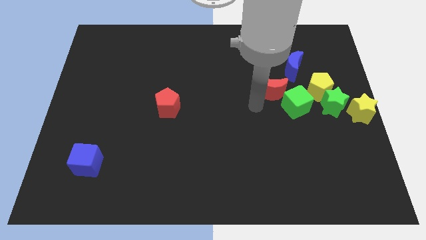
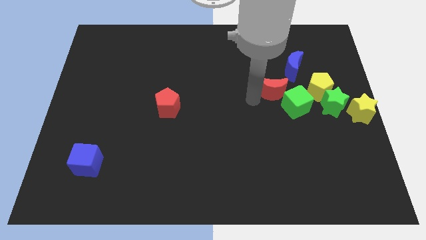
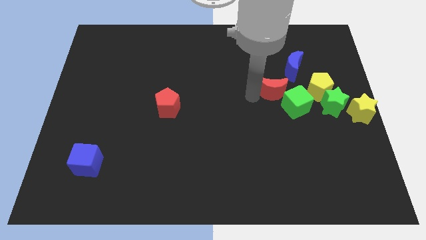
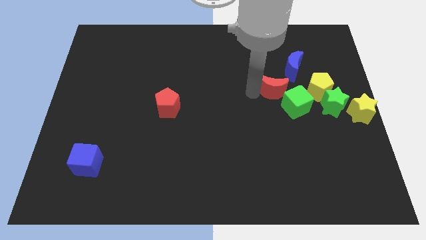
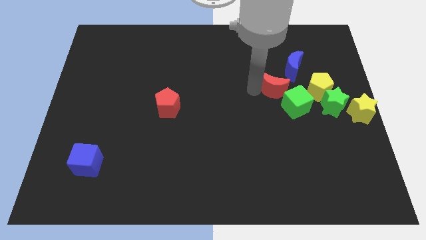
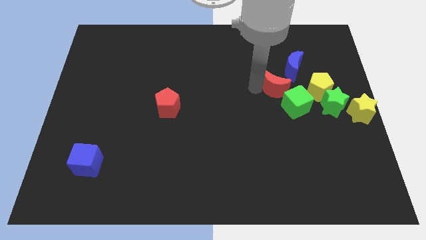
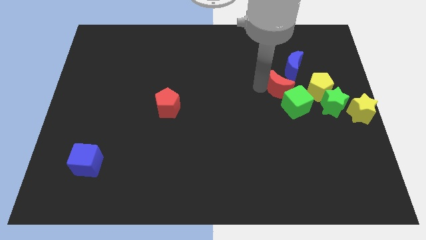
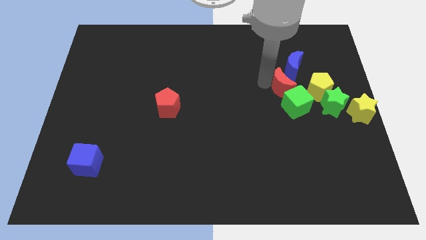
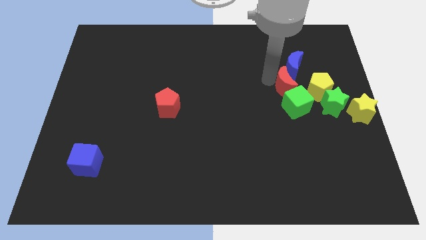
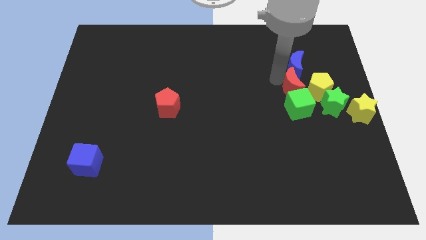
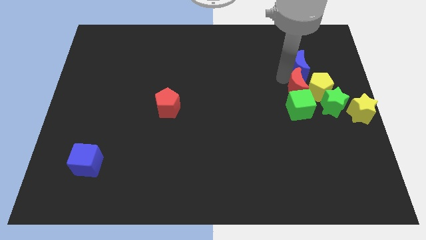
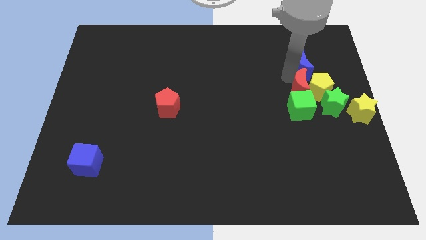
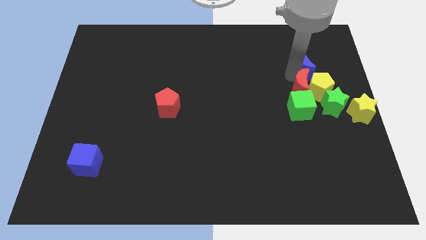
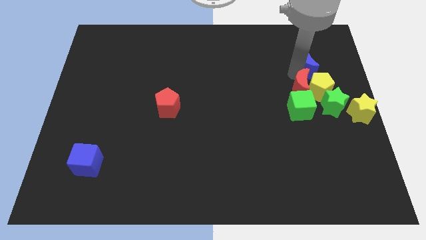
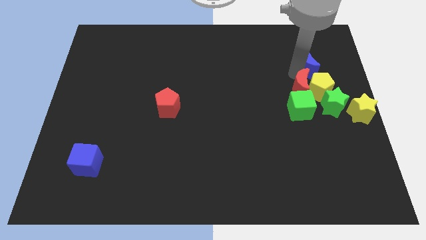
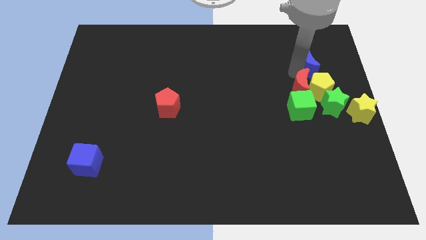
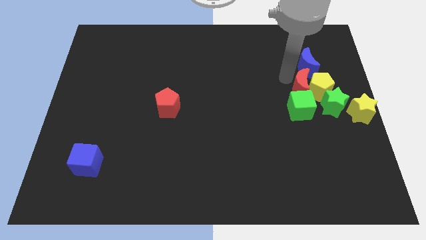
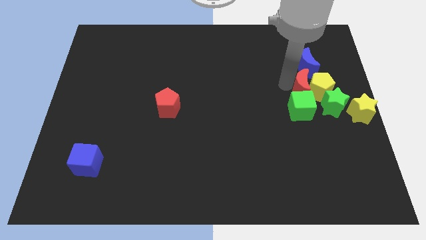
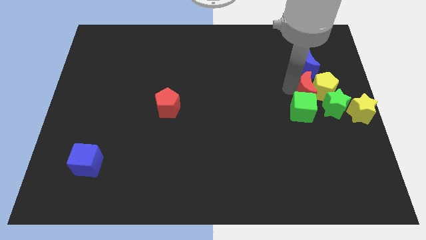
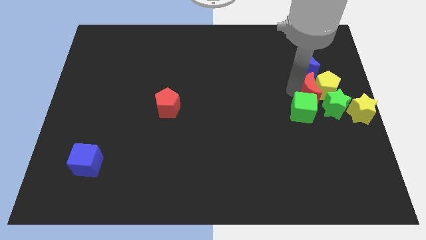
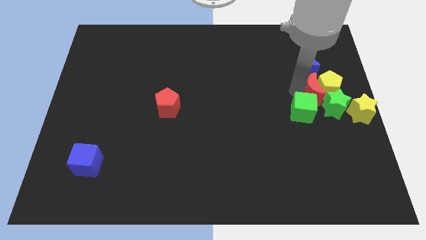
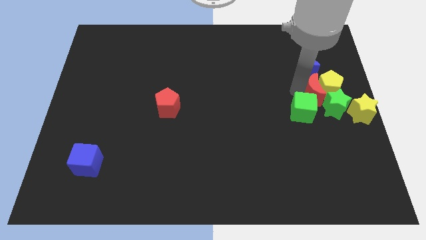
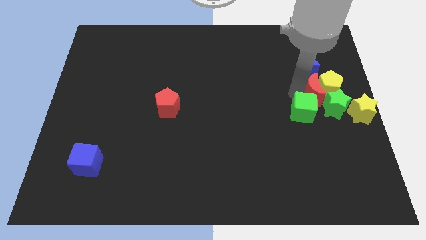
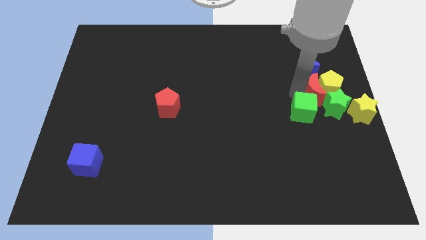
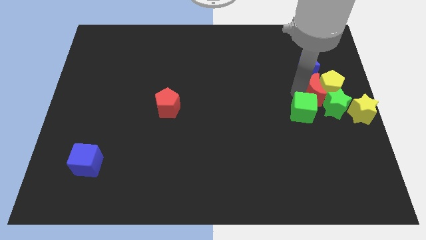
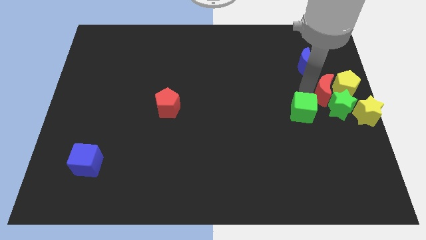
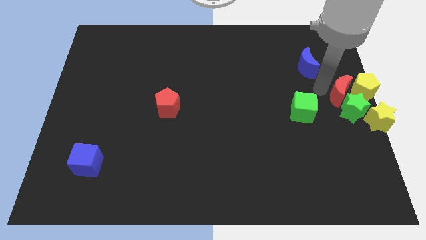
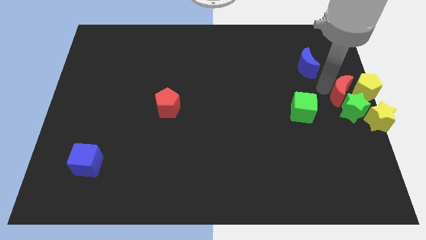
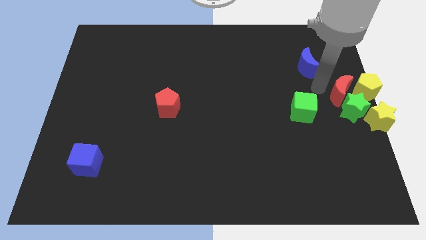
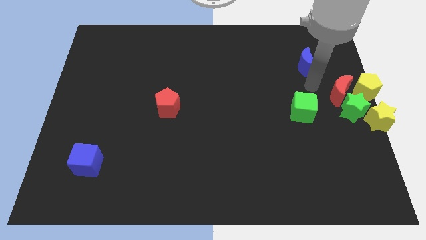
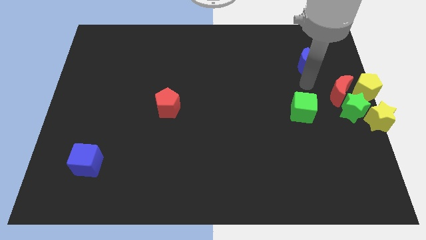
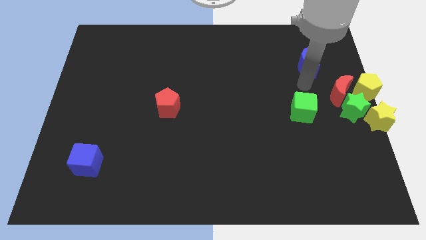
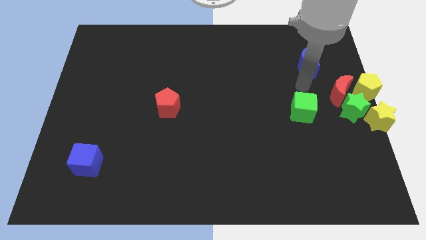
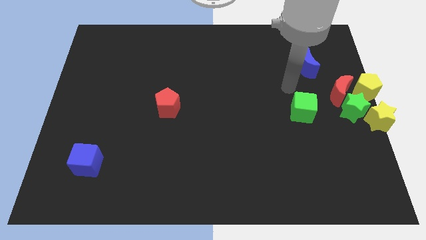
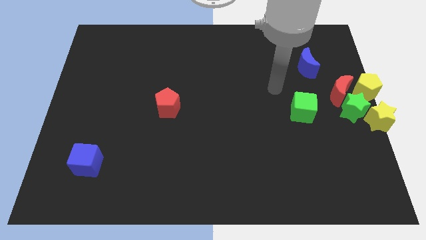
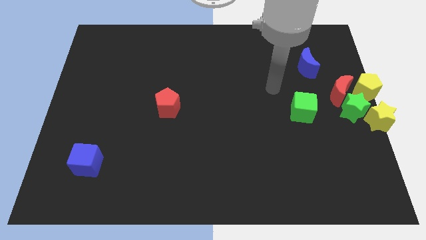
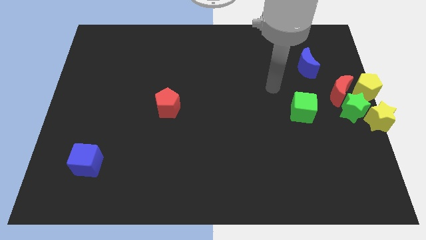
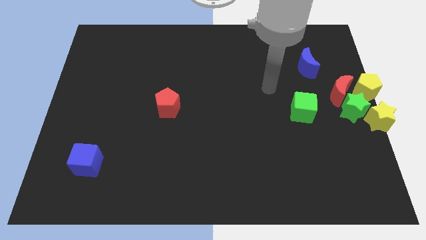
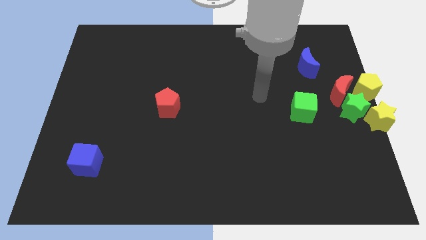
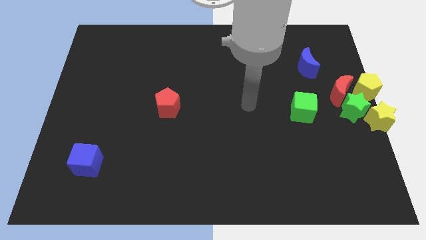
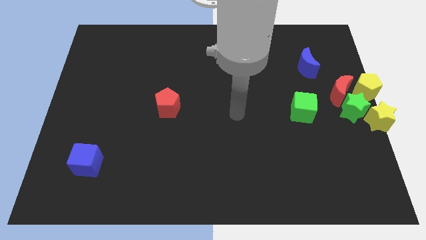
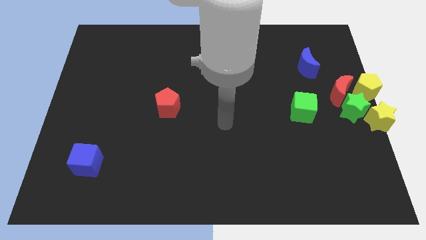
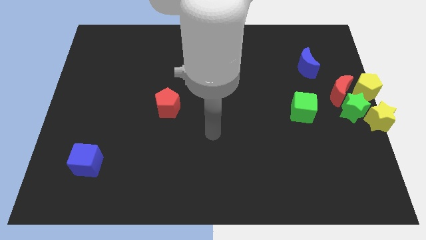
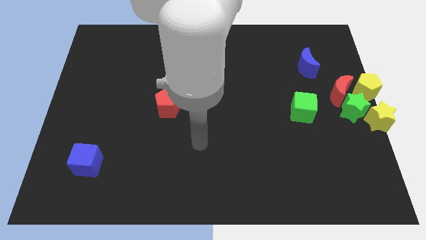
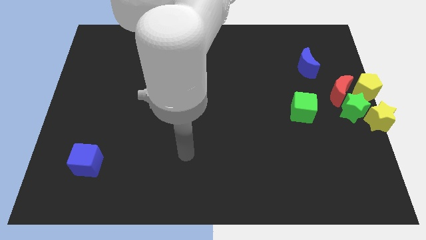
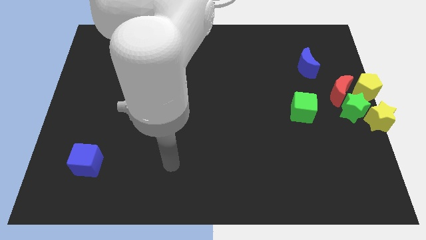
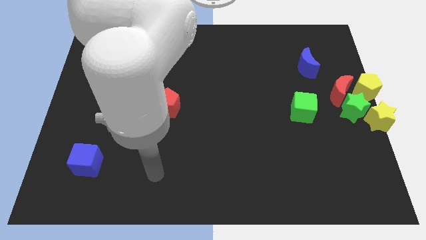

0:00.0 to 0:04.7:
push the red moon into the group of blocks

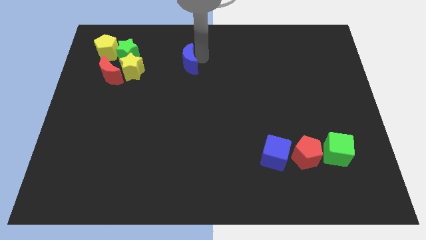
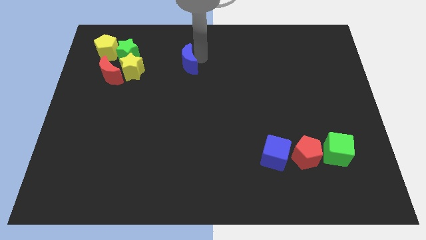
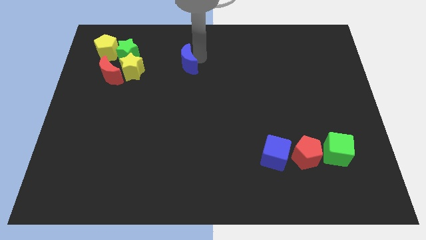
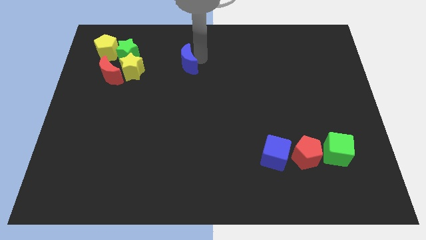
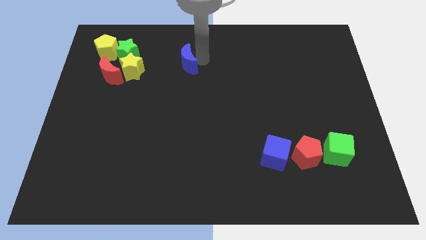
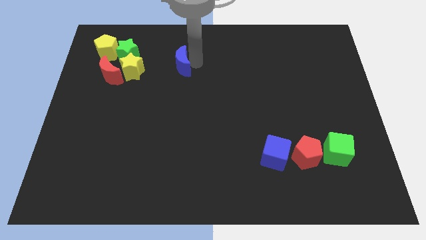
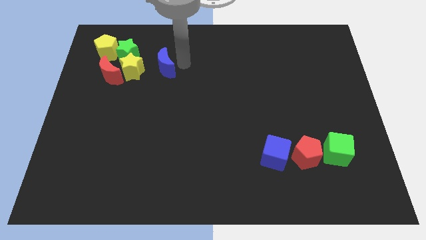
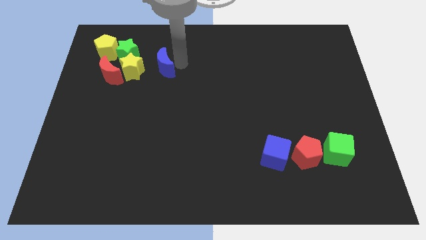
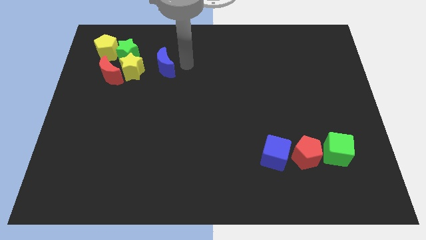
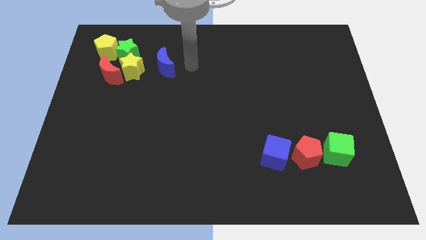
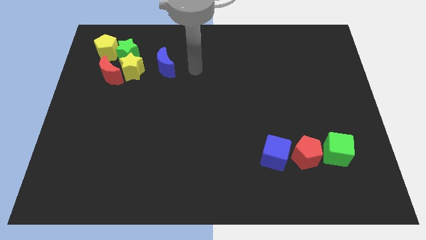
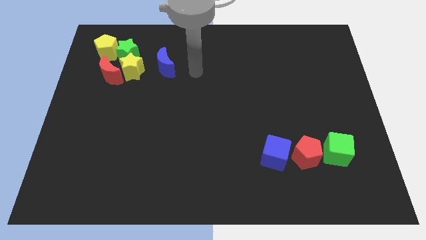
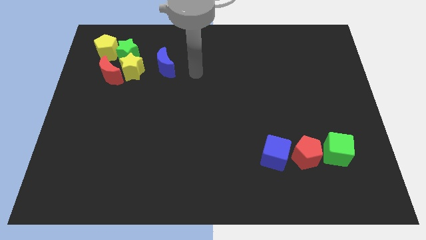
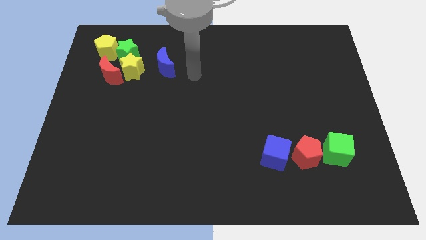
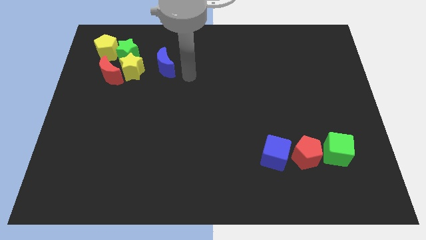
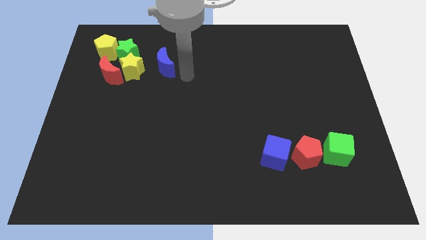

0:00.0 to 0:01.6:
slide the blue crescent slightly to the left

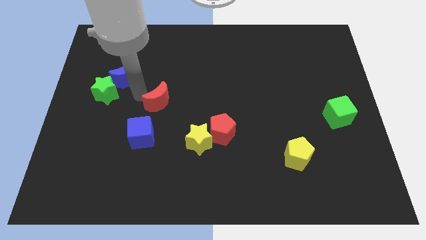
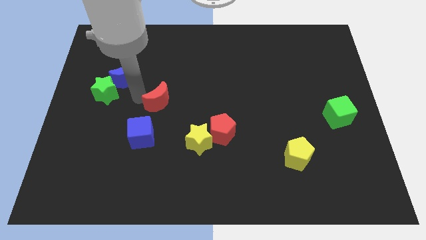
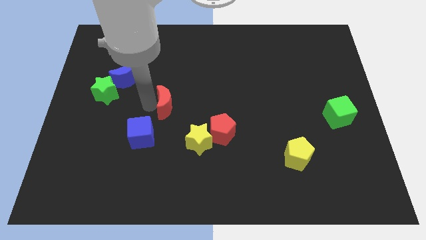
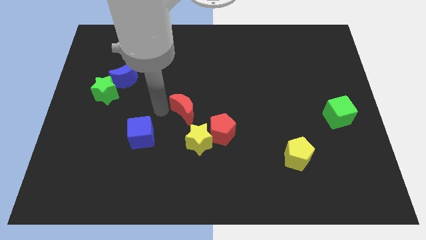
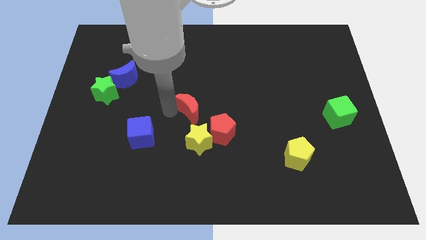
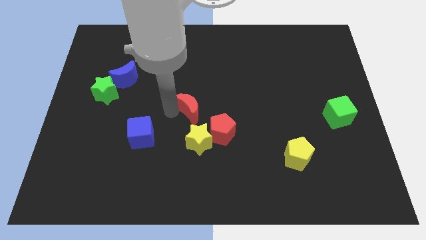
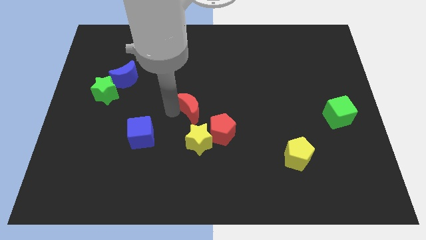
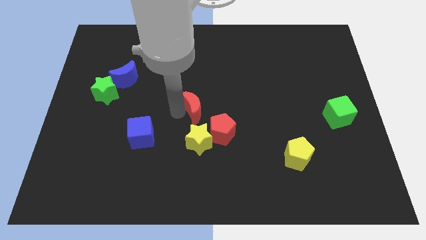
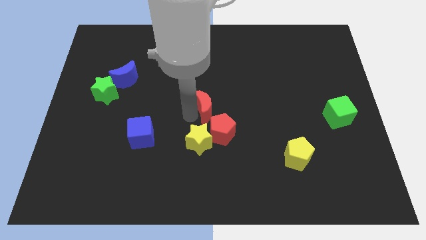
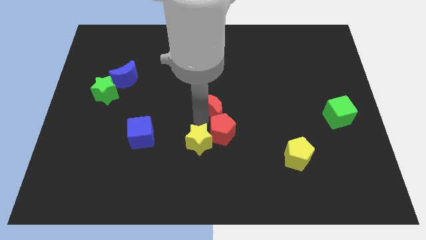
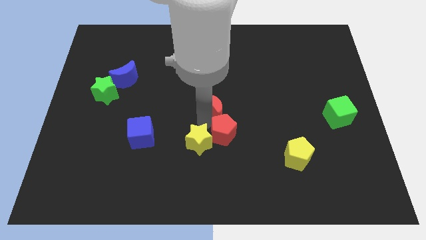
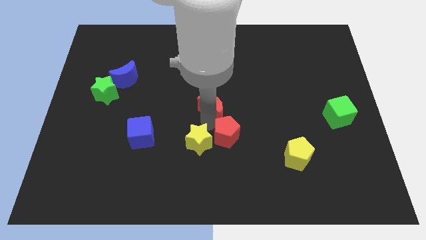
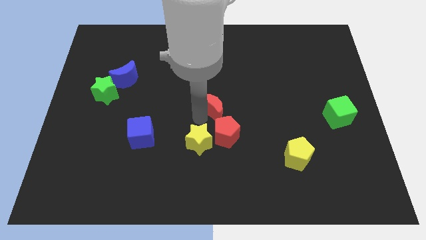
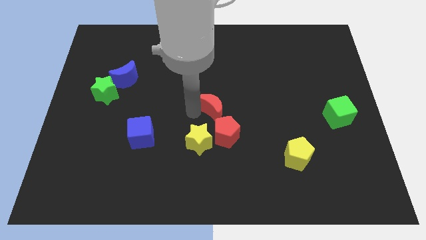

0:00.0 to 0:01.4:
push the red half moon to the center of the board

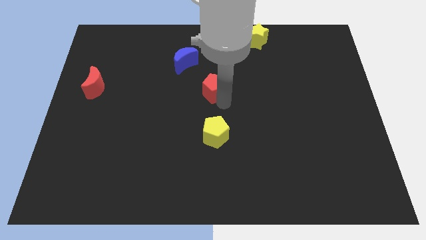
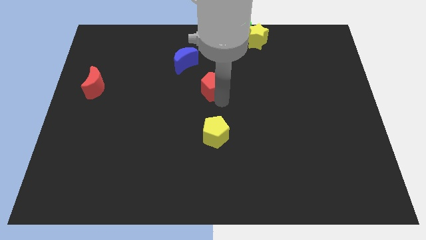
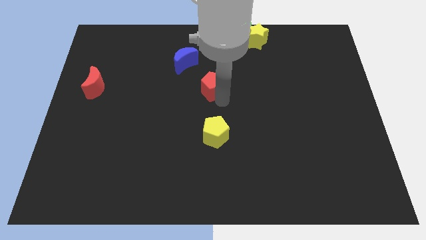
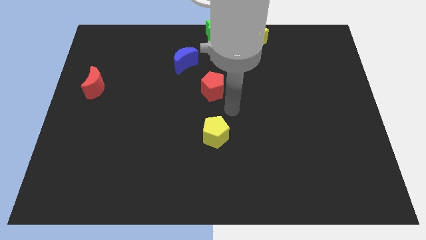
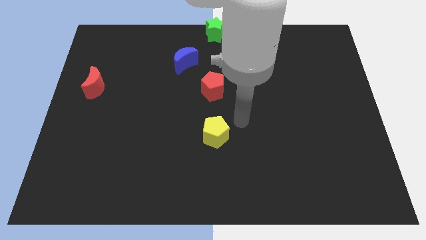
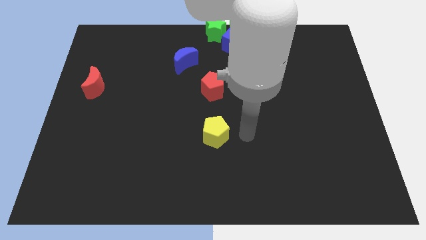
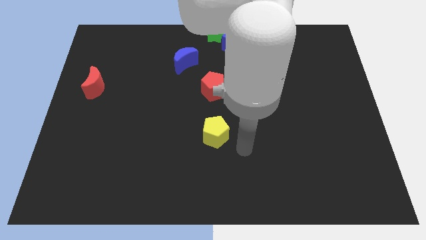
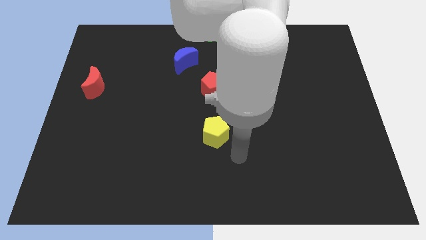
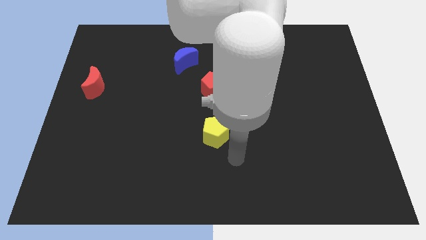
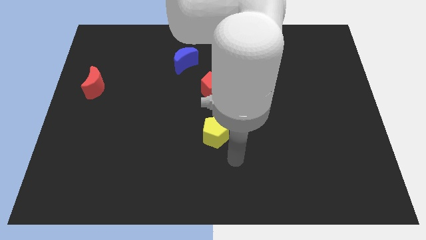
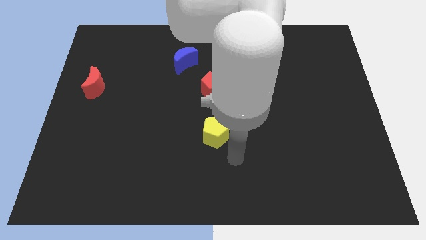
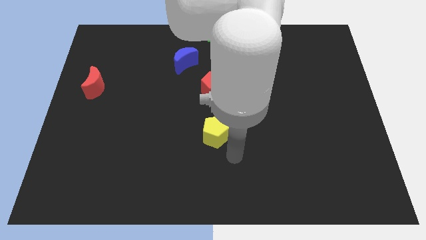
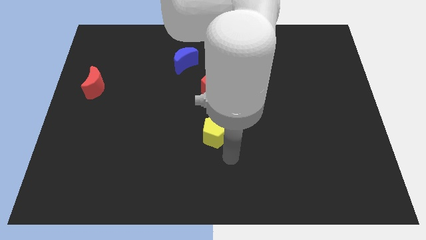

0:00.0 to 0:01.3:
move your arm away from the red pentagon
